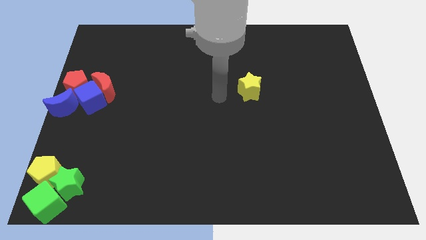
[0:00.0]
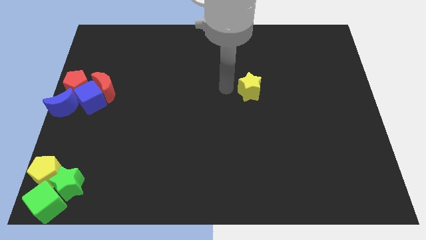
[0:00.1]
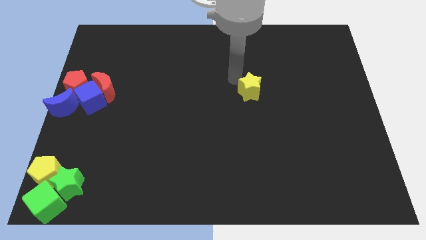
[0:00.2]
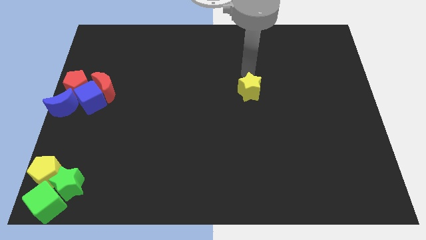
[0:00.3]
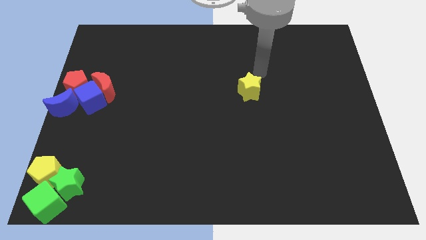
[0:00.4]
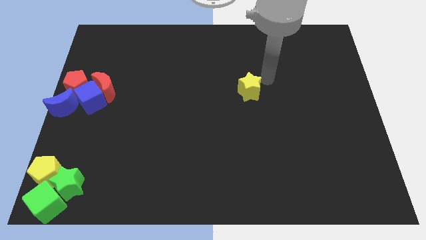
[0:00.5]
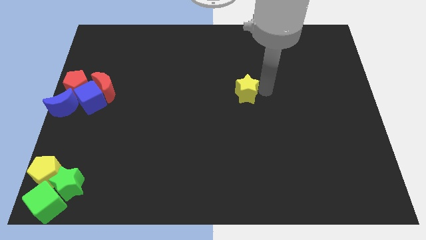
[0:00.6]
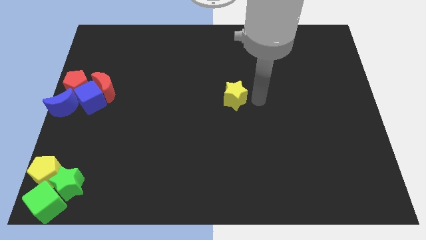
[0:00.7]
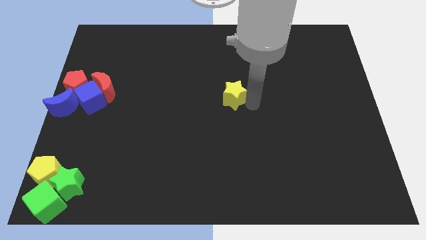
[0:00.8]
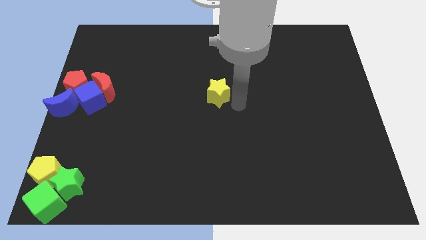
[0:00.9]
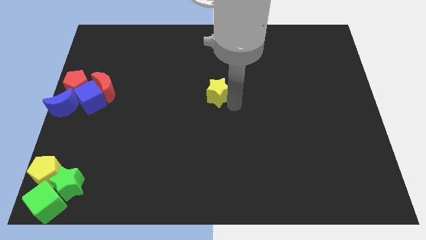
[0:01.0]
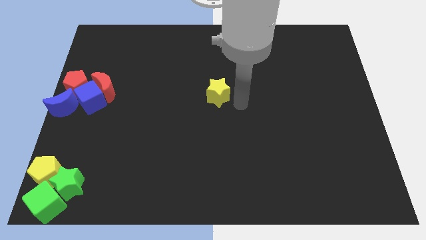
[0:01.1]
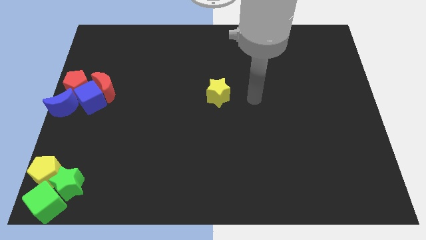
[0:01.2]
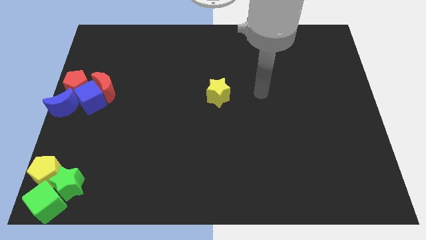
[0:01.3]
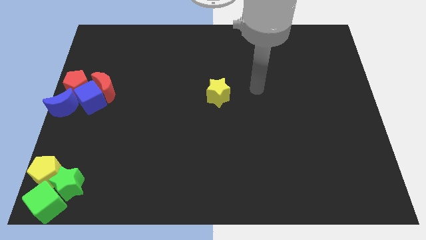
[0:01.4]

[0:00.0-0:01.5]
move the yellow star to the center of the board

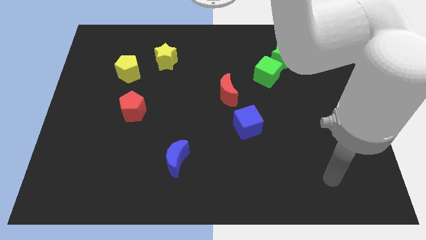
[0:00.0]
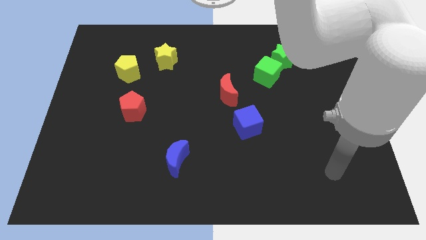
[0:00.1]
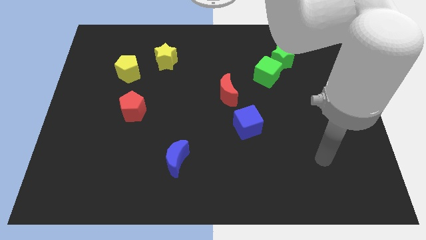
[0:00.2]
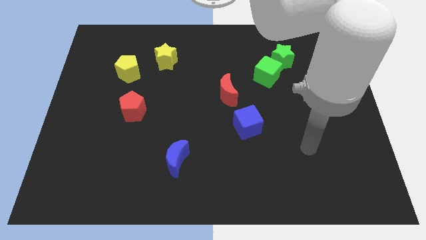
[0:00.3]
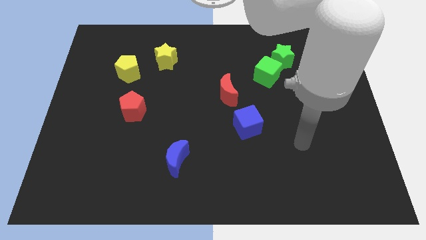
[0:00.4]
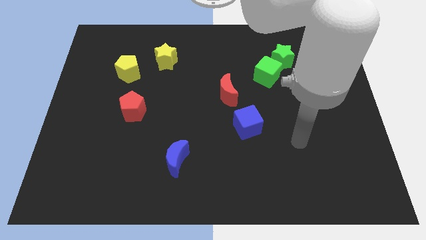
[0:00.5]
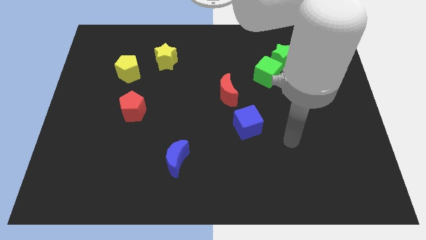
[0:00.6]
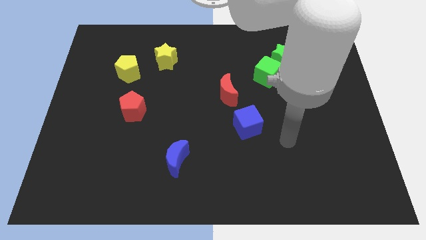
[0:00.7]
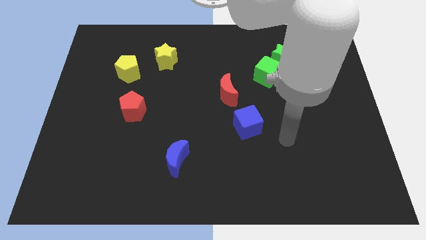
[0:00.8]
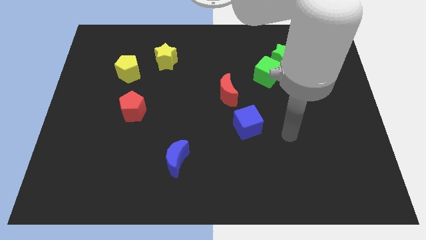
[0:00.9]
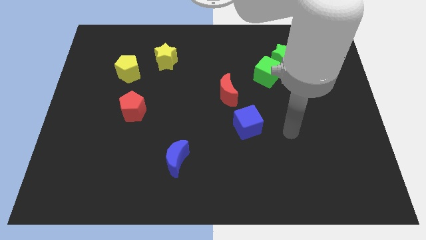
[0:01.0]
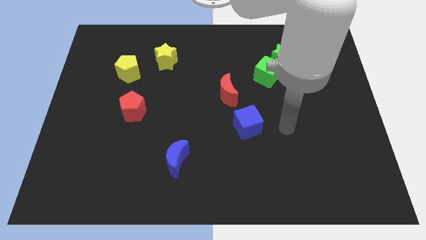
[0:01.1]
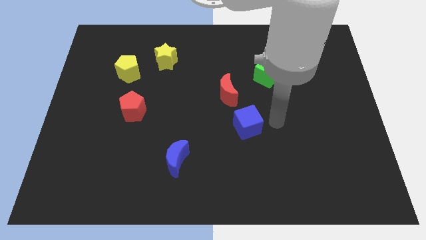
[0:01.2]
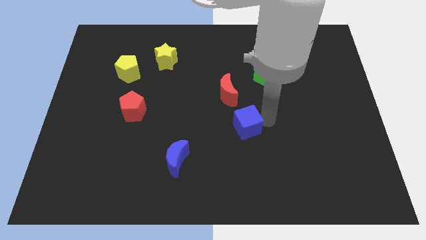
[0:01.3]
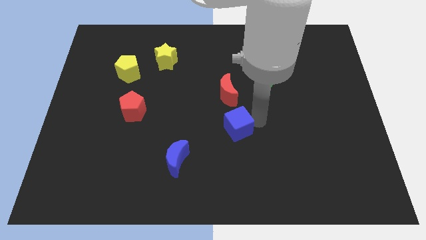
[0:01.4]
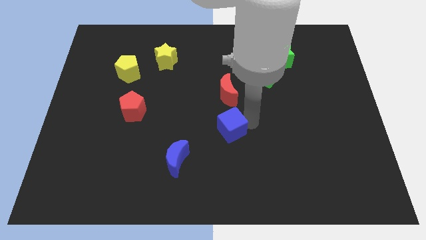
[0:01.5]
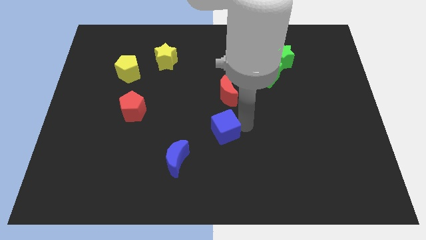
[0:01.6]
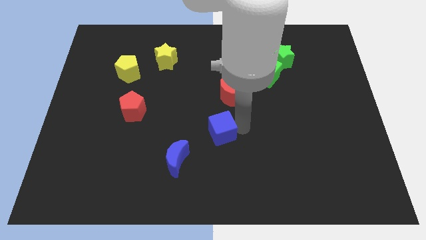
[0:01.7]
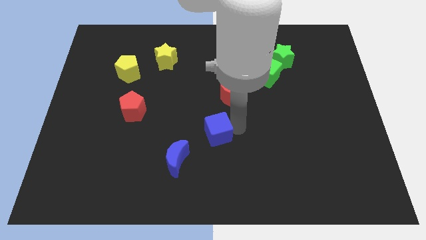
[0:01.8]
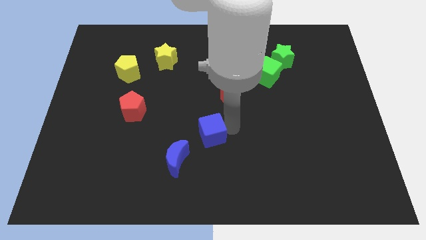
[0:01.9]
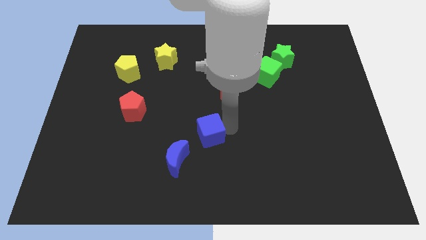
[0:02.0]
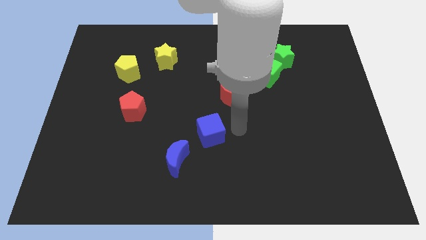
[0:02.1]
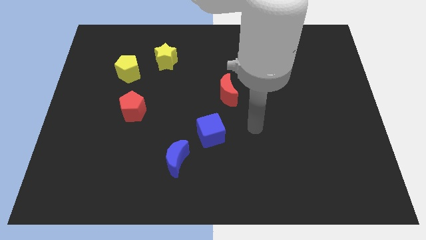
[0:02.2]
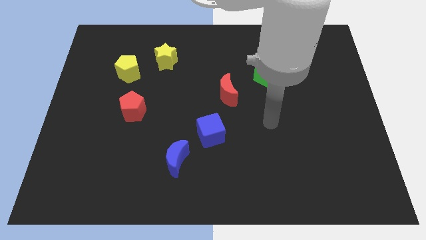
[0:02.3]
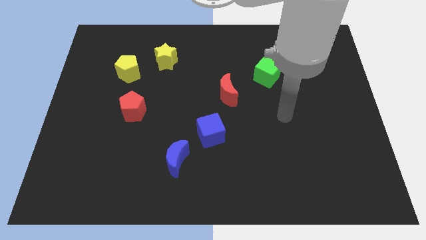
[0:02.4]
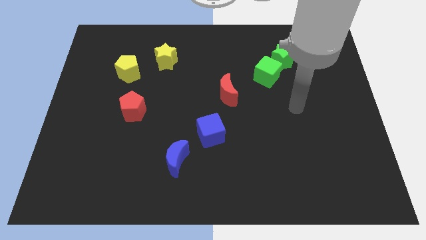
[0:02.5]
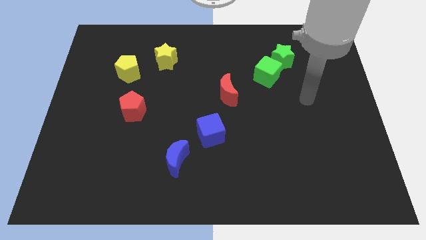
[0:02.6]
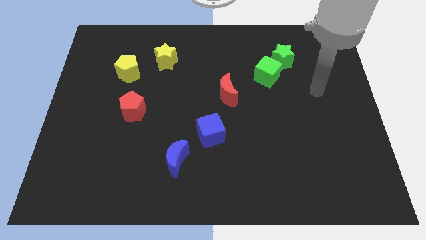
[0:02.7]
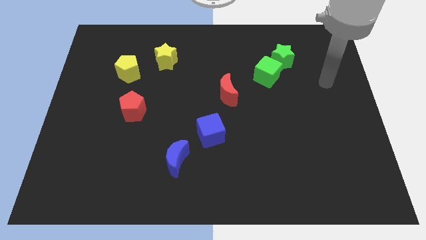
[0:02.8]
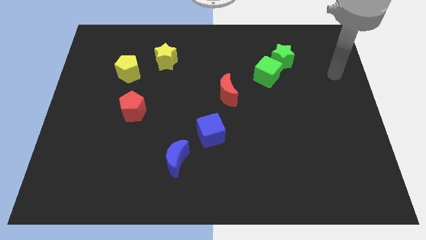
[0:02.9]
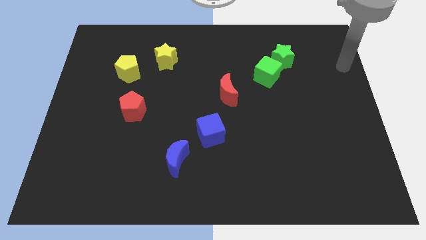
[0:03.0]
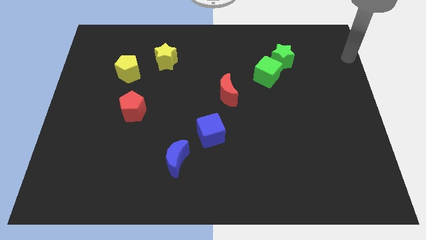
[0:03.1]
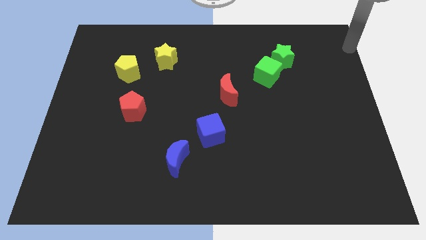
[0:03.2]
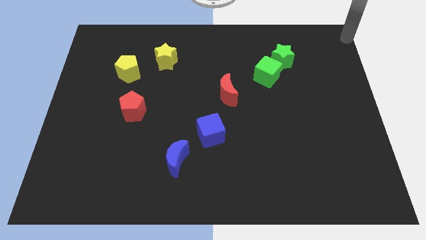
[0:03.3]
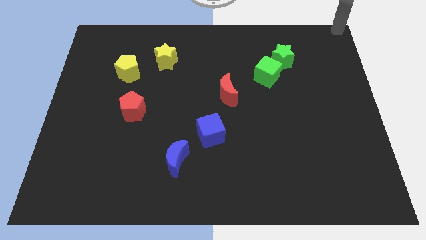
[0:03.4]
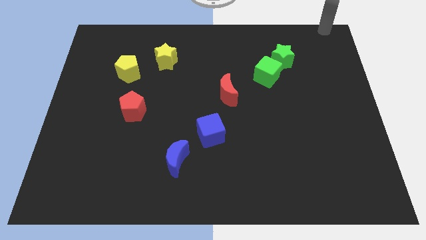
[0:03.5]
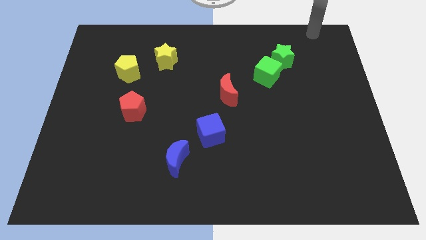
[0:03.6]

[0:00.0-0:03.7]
move the blue cube to the center

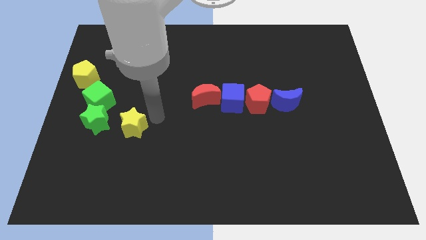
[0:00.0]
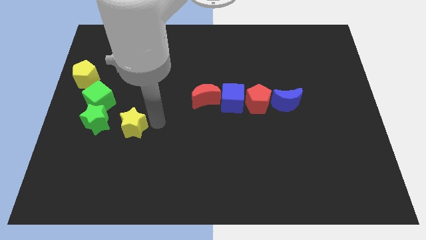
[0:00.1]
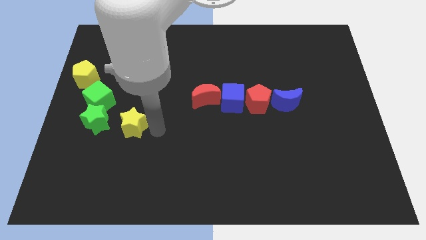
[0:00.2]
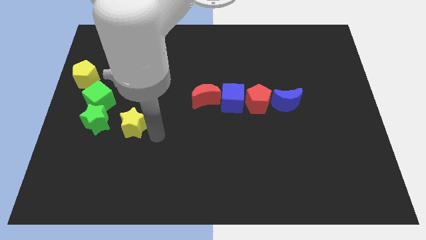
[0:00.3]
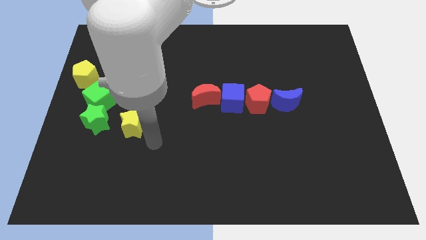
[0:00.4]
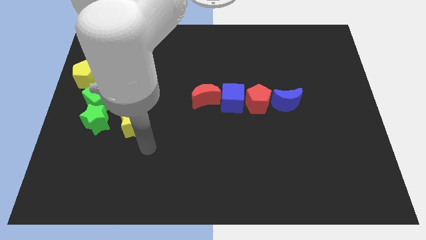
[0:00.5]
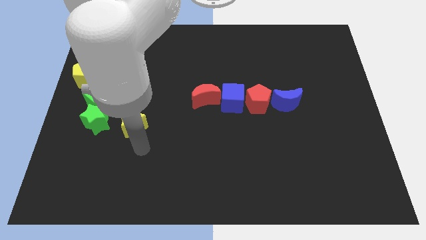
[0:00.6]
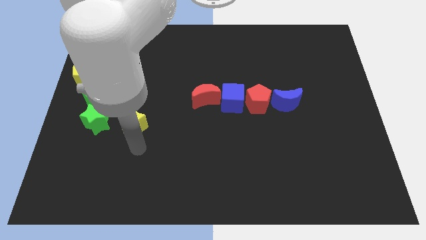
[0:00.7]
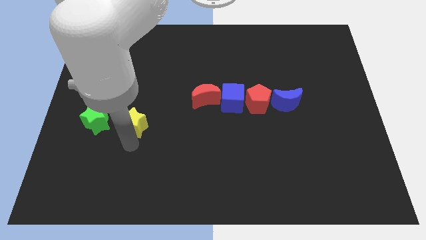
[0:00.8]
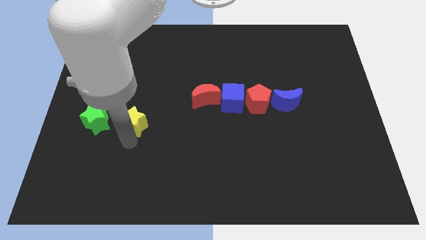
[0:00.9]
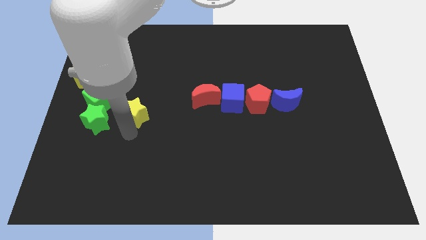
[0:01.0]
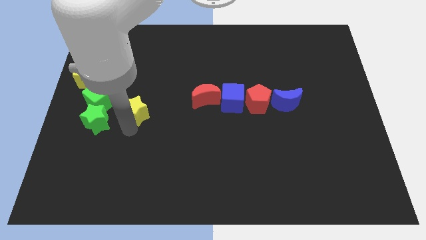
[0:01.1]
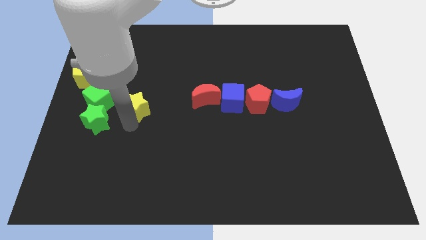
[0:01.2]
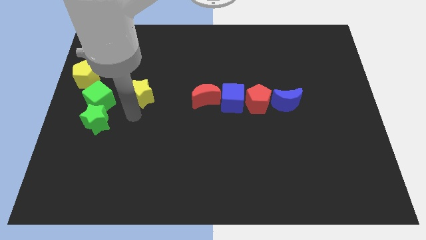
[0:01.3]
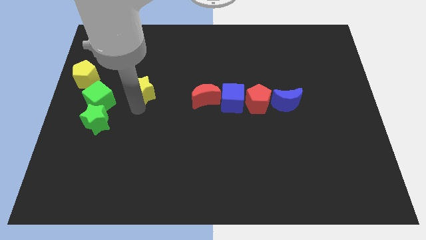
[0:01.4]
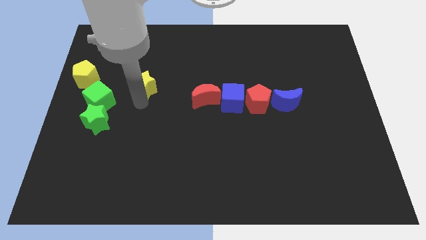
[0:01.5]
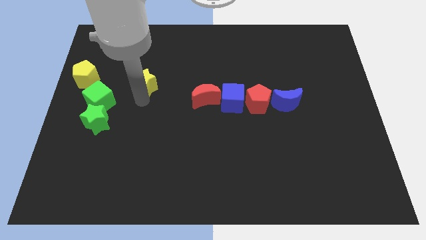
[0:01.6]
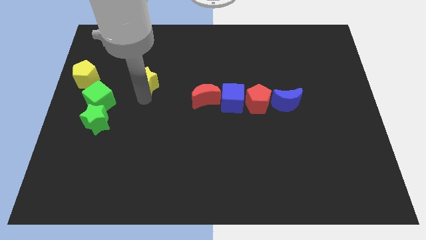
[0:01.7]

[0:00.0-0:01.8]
move the yellow star to the right of the yellow pentagon

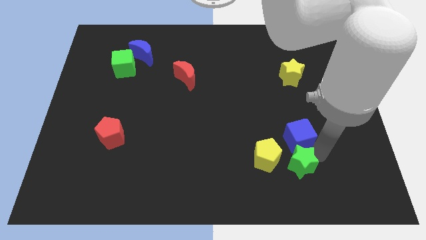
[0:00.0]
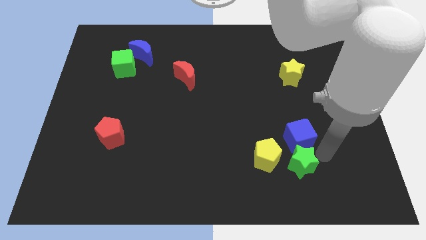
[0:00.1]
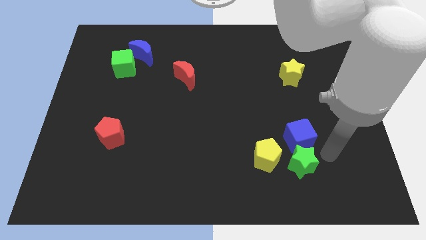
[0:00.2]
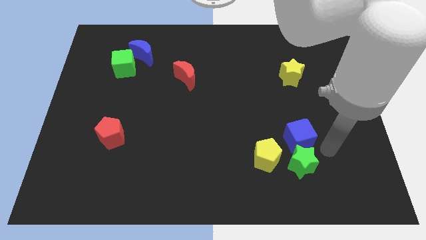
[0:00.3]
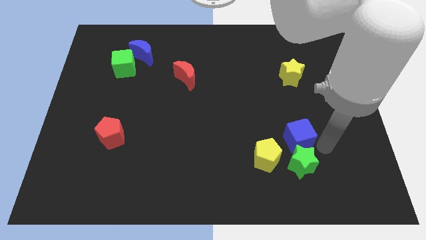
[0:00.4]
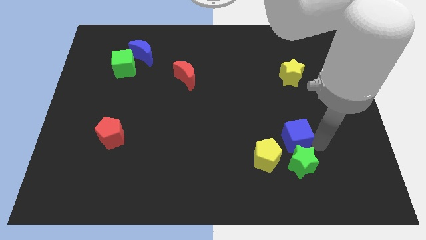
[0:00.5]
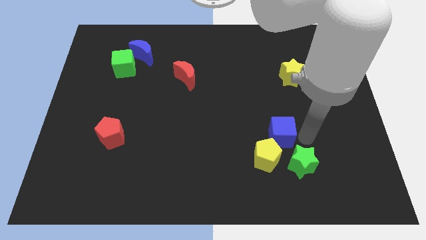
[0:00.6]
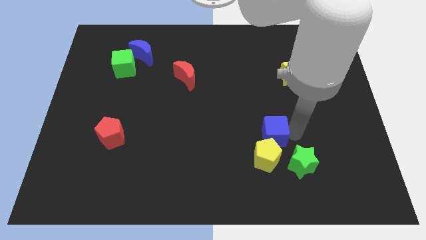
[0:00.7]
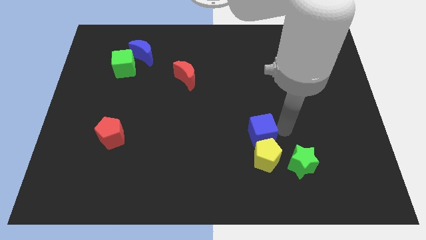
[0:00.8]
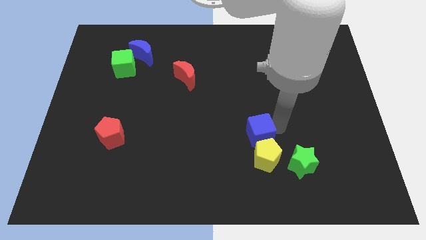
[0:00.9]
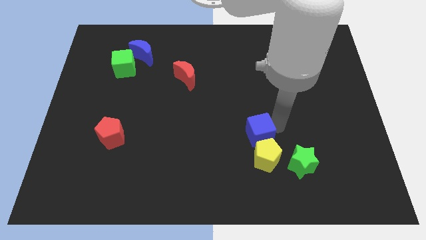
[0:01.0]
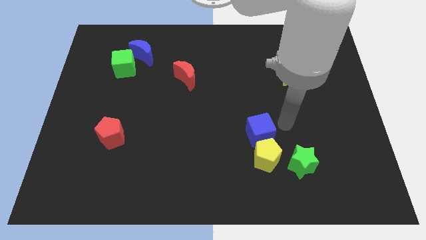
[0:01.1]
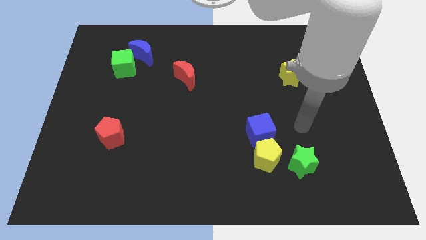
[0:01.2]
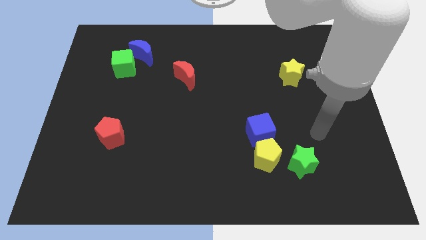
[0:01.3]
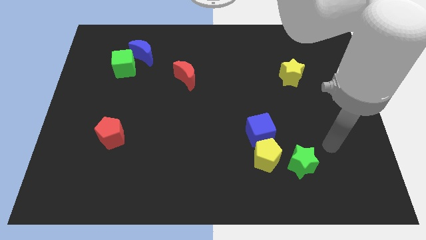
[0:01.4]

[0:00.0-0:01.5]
push the blue cube to the top of the yellow pentagon

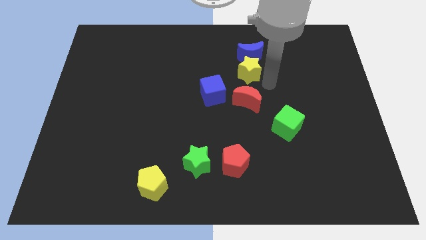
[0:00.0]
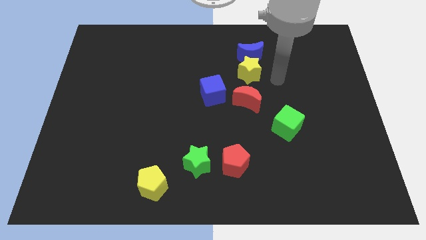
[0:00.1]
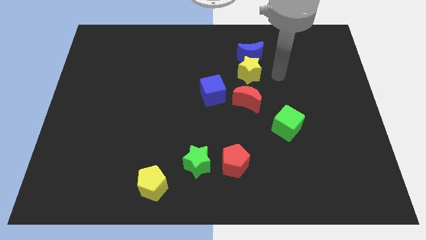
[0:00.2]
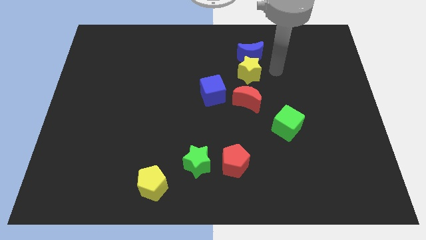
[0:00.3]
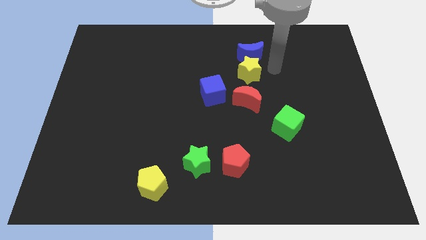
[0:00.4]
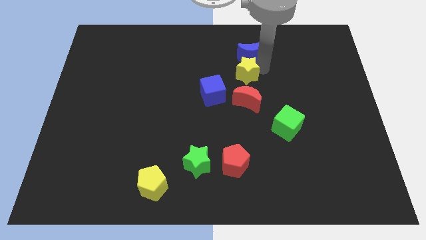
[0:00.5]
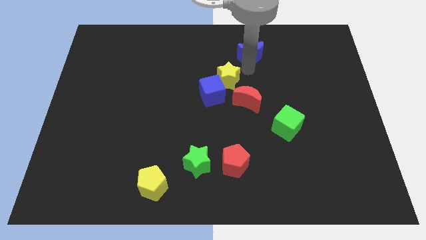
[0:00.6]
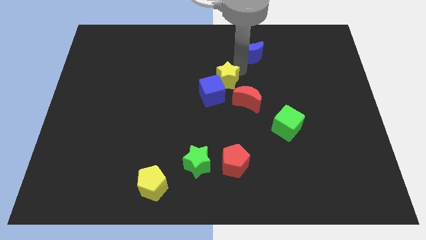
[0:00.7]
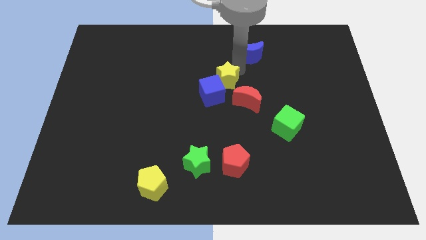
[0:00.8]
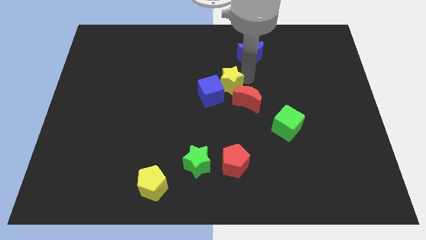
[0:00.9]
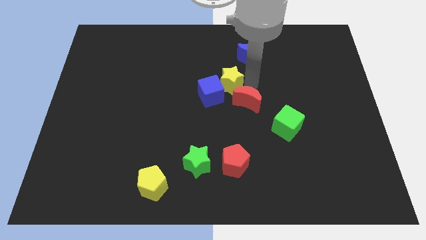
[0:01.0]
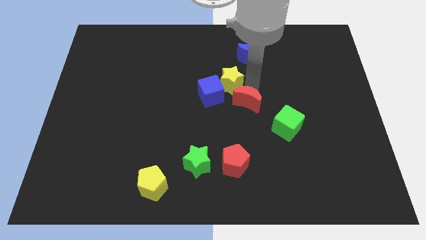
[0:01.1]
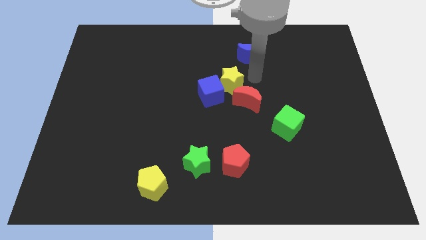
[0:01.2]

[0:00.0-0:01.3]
push the yellow star close to the blue cube
